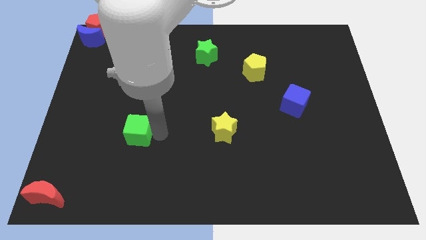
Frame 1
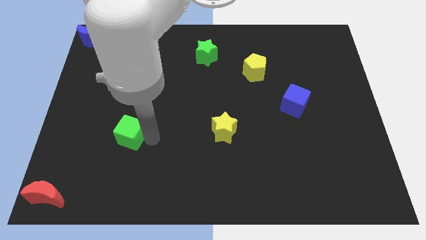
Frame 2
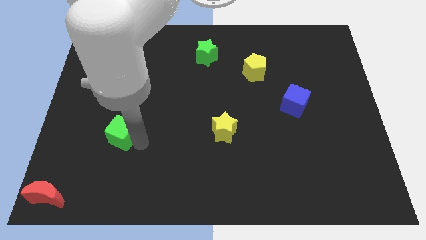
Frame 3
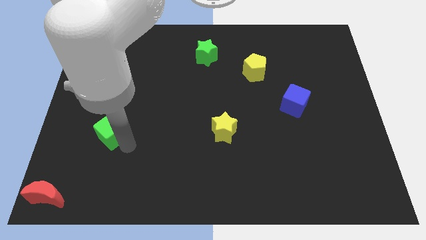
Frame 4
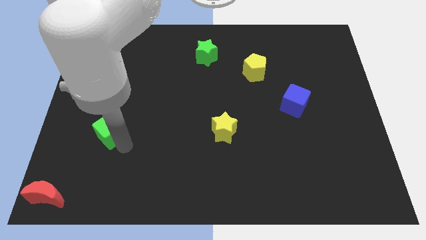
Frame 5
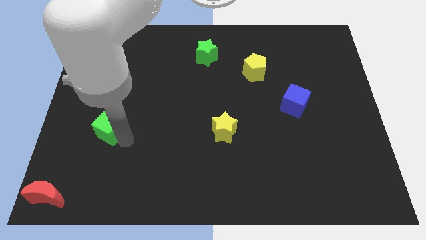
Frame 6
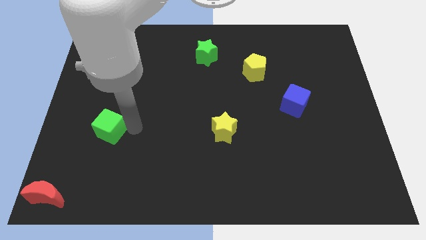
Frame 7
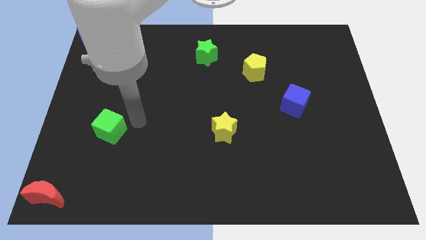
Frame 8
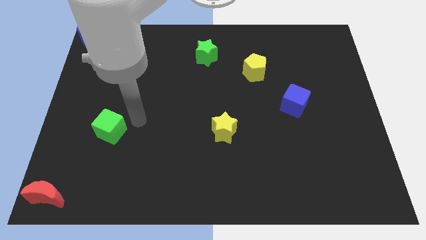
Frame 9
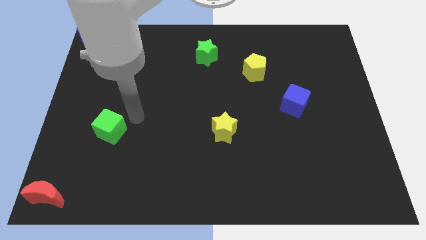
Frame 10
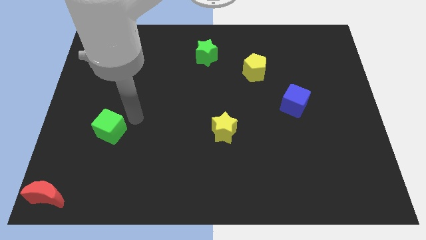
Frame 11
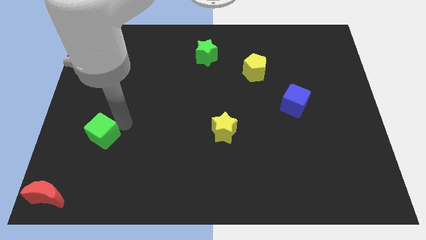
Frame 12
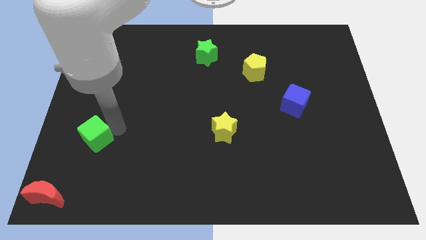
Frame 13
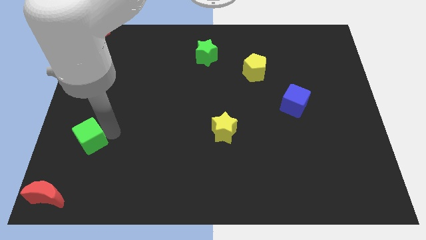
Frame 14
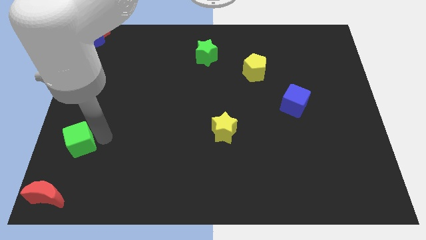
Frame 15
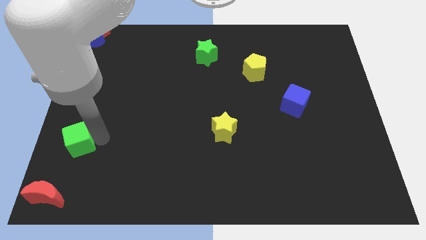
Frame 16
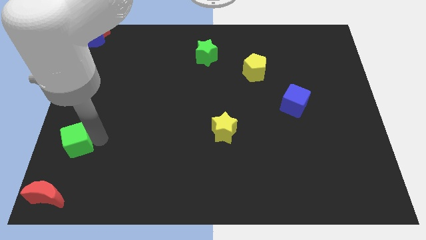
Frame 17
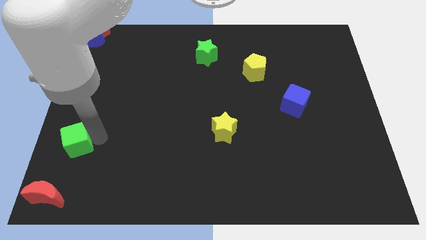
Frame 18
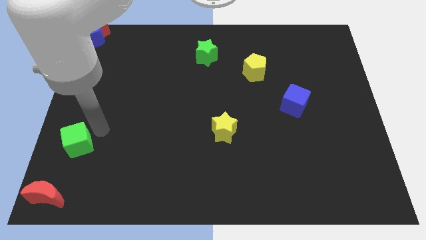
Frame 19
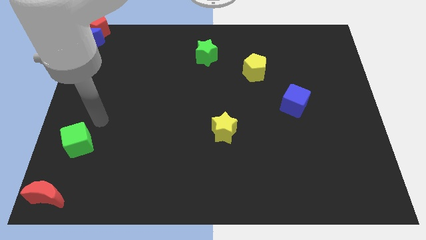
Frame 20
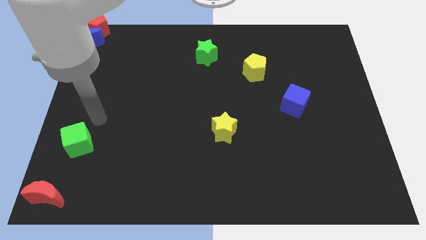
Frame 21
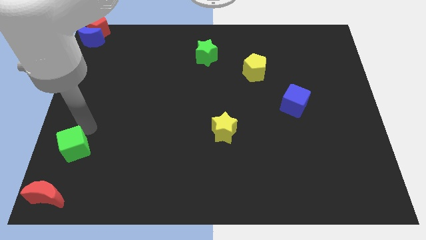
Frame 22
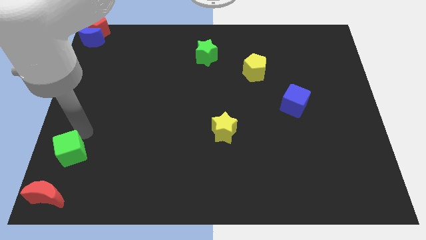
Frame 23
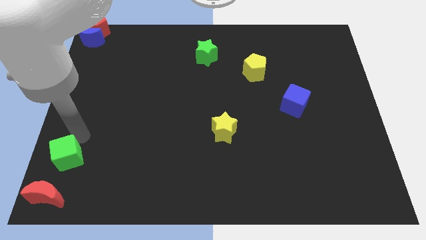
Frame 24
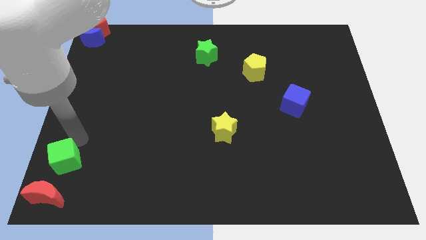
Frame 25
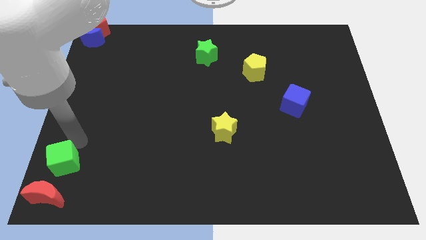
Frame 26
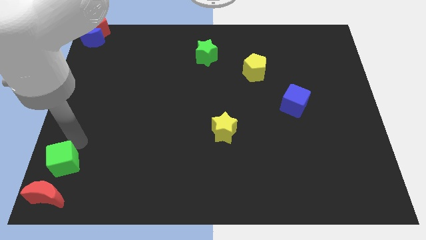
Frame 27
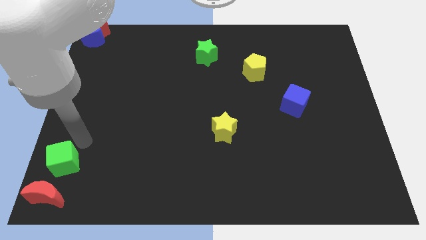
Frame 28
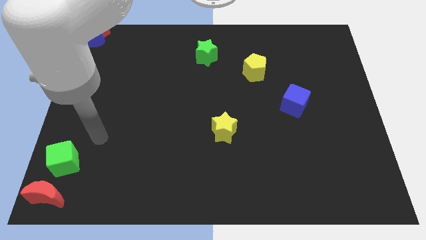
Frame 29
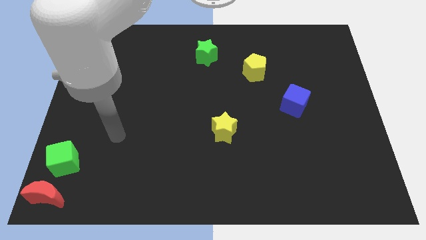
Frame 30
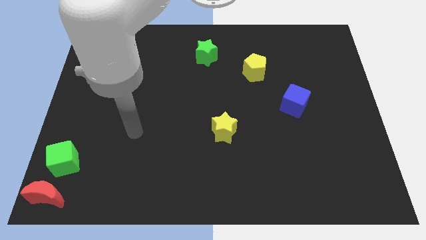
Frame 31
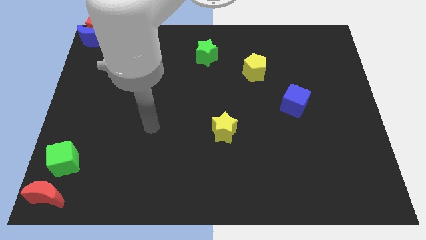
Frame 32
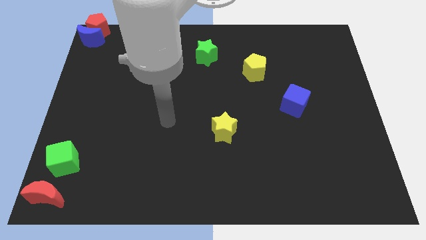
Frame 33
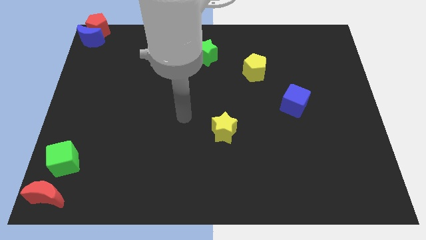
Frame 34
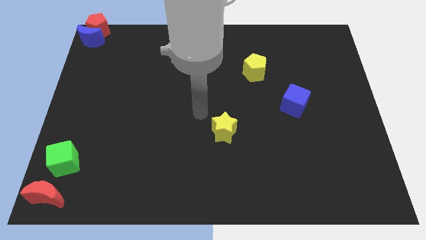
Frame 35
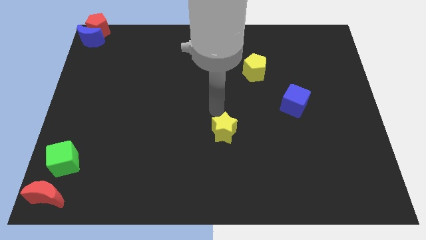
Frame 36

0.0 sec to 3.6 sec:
place the green cube above the red crescent

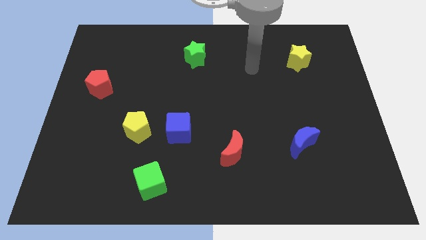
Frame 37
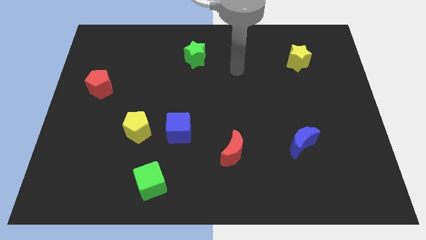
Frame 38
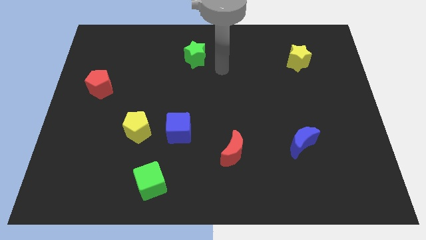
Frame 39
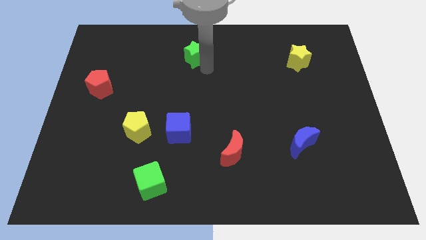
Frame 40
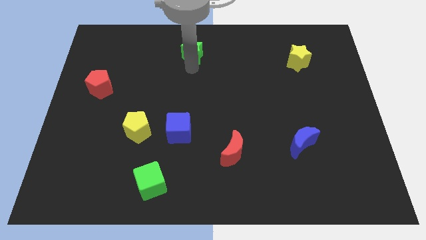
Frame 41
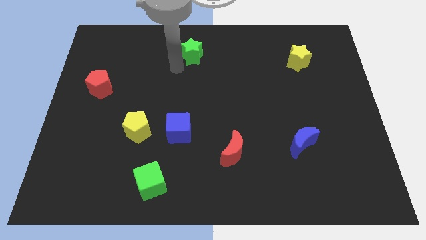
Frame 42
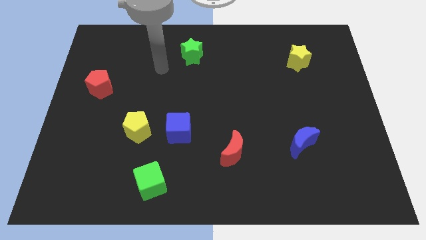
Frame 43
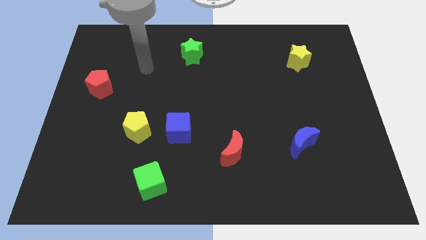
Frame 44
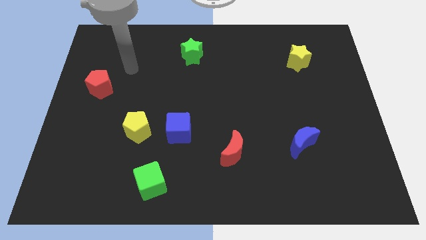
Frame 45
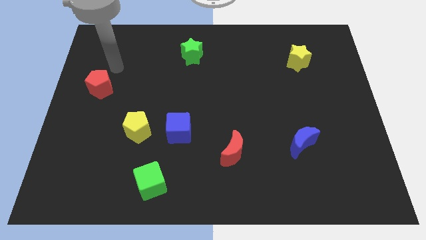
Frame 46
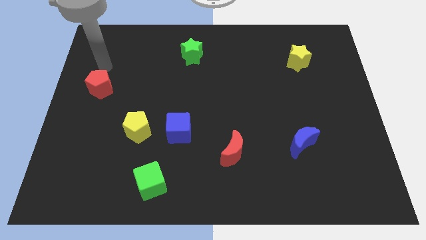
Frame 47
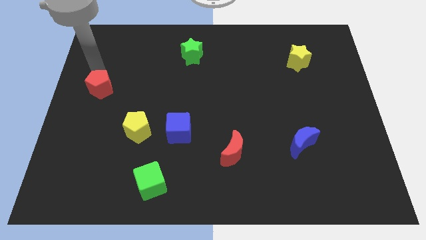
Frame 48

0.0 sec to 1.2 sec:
place your arm on the top of the red pentagon

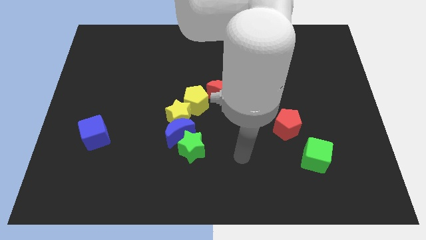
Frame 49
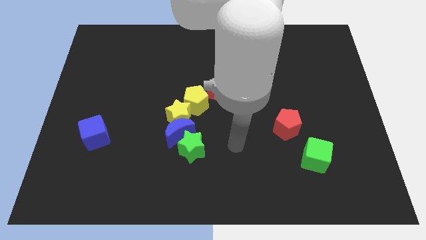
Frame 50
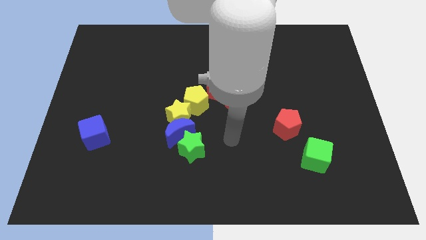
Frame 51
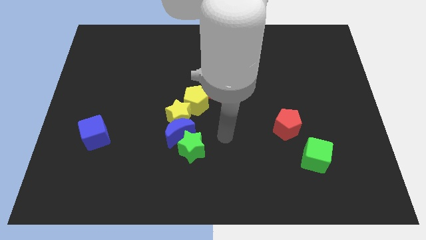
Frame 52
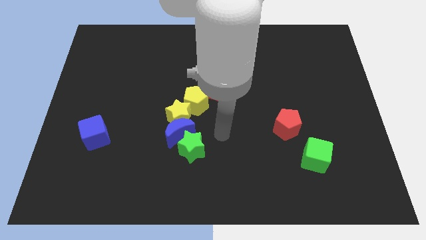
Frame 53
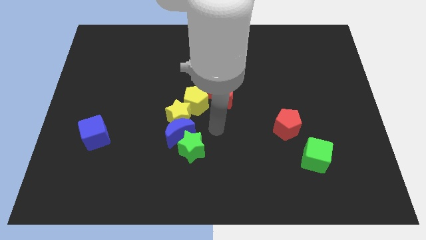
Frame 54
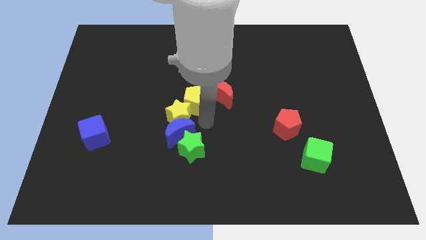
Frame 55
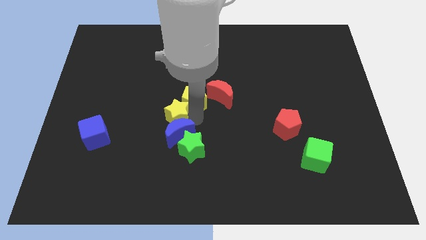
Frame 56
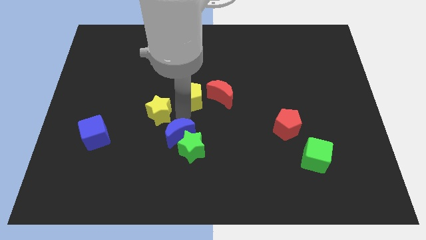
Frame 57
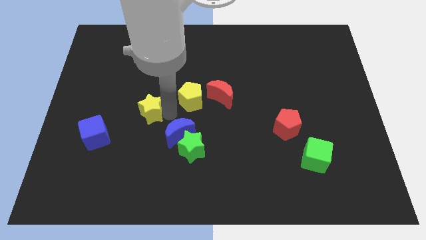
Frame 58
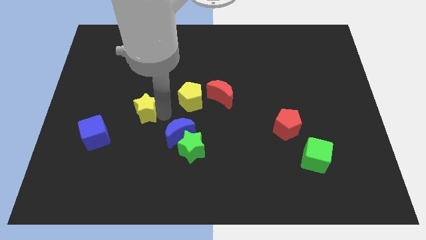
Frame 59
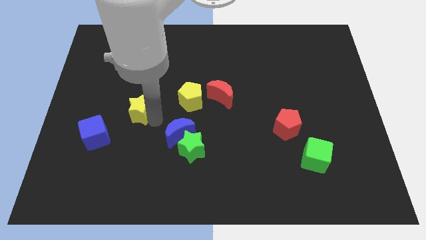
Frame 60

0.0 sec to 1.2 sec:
move the yellow star to the left of the board

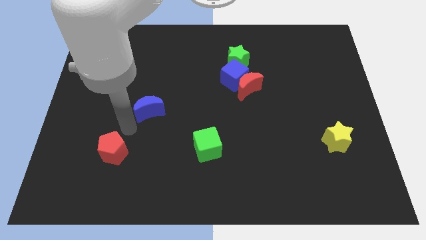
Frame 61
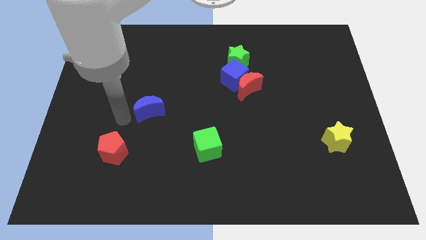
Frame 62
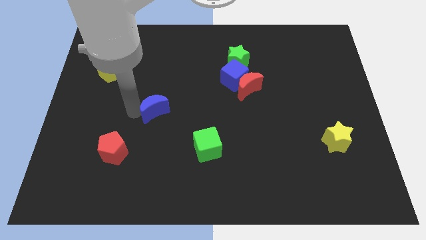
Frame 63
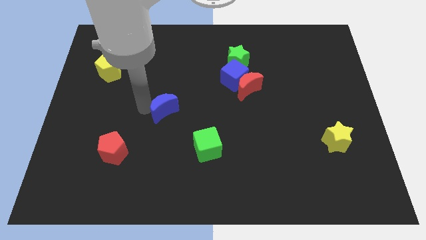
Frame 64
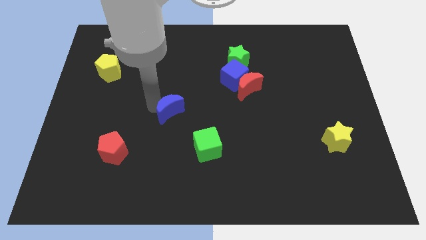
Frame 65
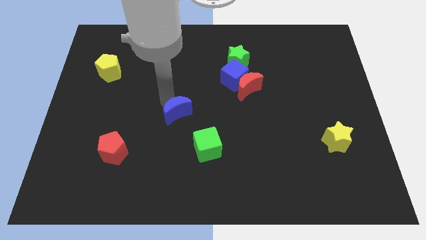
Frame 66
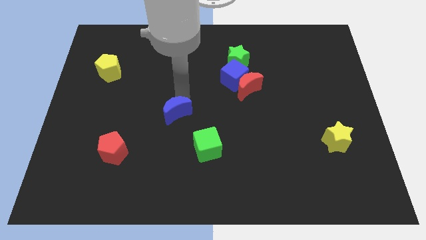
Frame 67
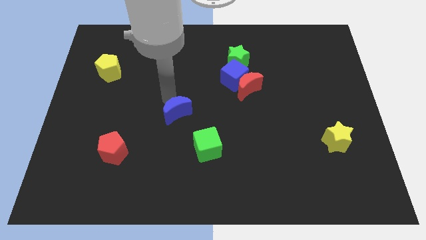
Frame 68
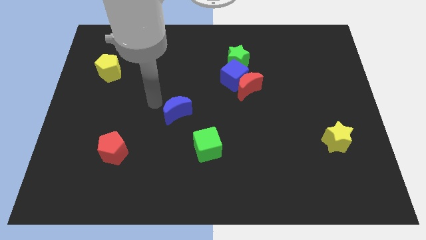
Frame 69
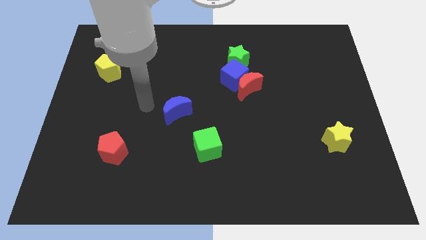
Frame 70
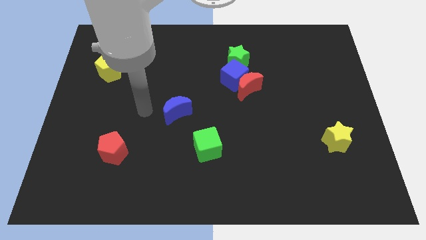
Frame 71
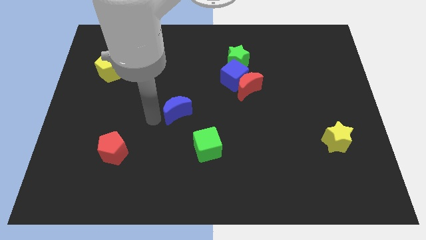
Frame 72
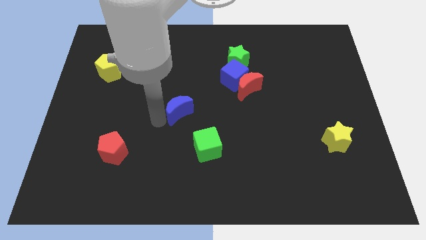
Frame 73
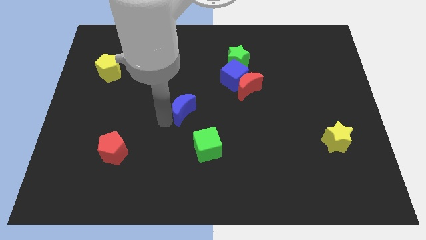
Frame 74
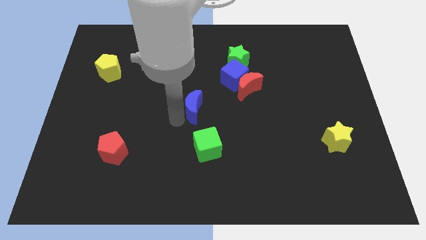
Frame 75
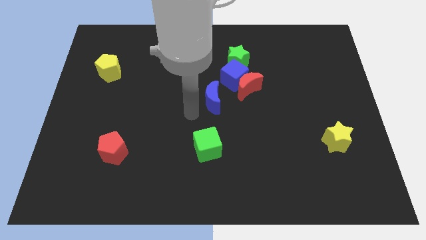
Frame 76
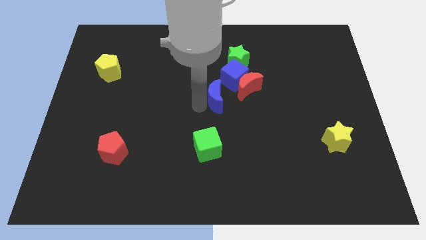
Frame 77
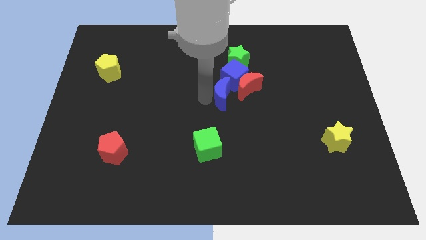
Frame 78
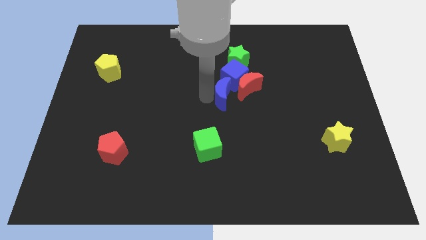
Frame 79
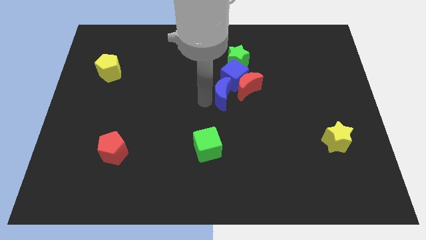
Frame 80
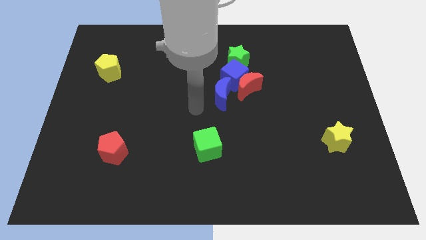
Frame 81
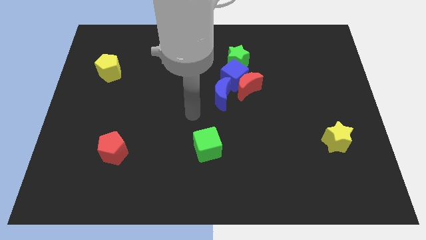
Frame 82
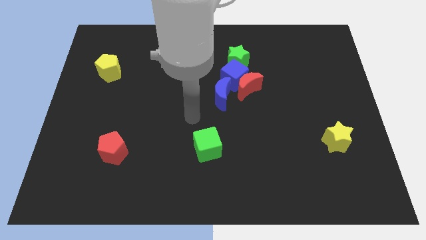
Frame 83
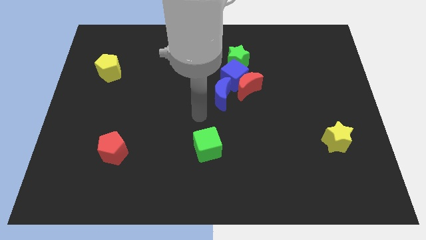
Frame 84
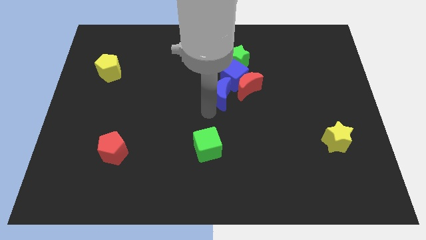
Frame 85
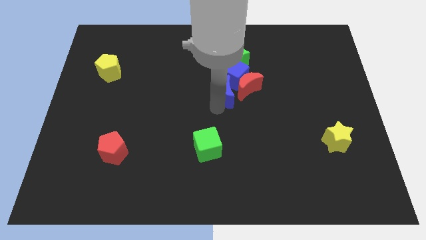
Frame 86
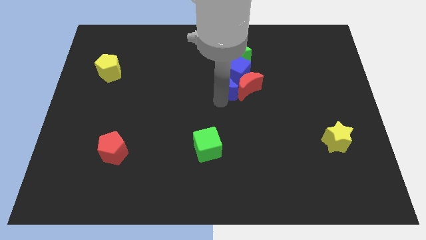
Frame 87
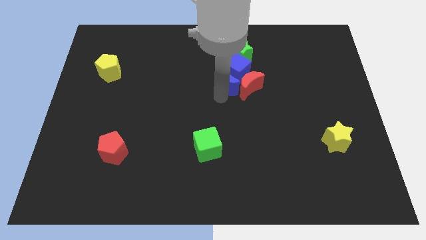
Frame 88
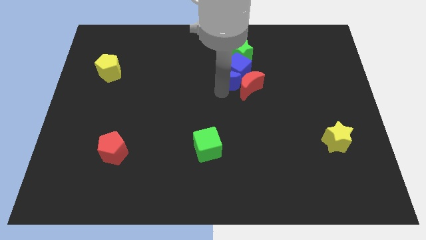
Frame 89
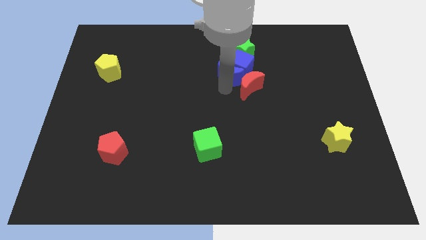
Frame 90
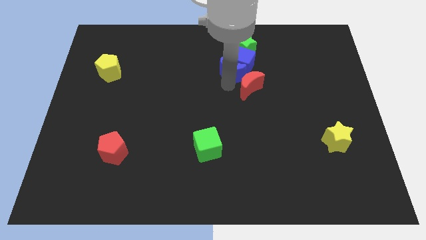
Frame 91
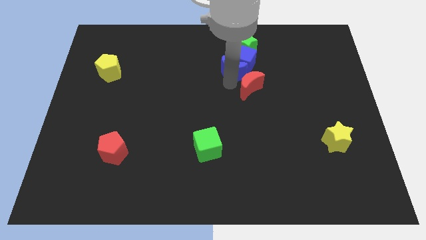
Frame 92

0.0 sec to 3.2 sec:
push the blue crescent into the blue cube
